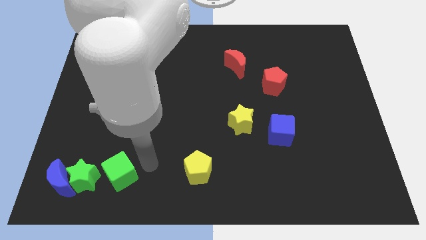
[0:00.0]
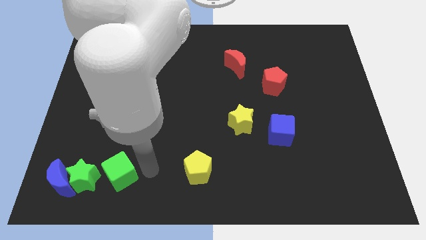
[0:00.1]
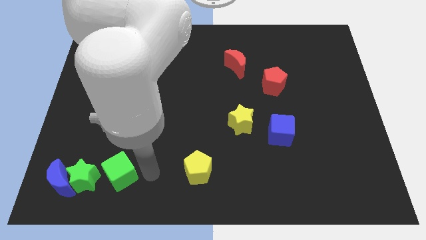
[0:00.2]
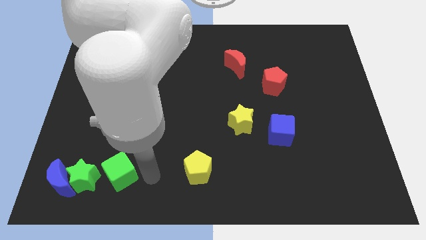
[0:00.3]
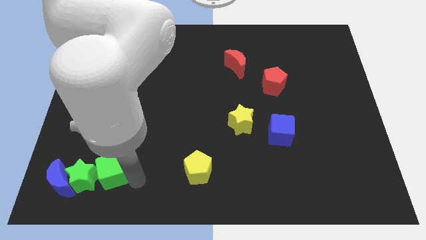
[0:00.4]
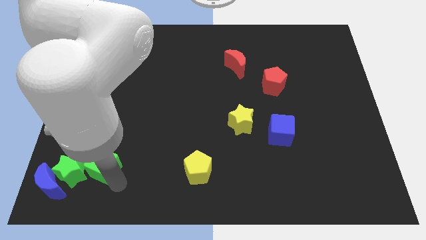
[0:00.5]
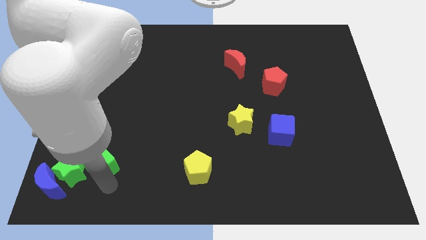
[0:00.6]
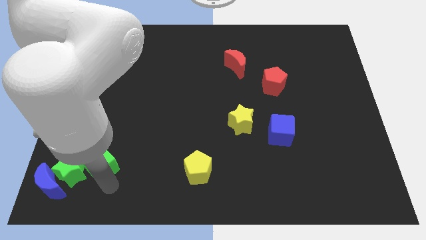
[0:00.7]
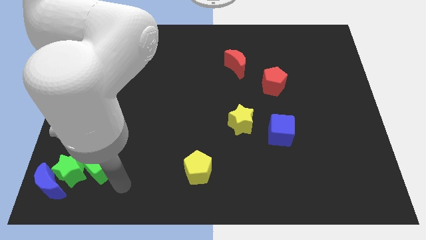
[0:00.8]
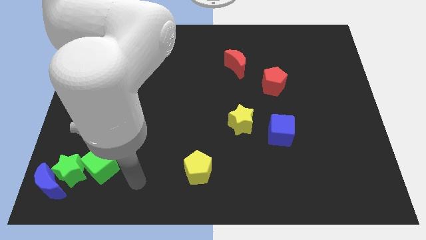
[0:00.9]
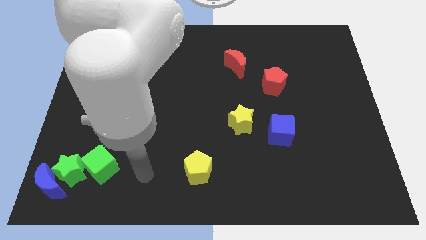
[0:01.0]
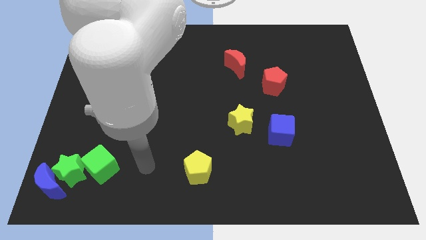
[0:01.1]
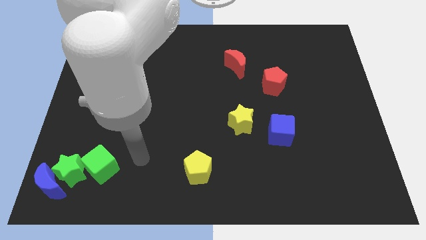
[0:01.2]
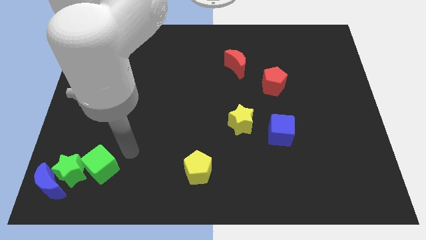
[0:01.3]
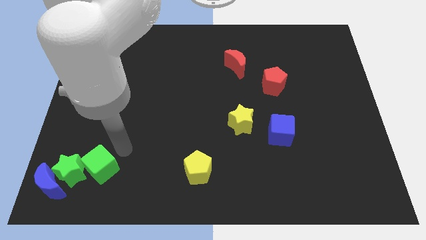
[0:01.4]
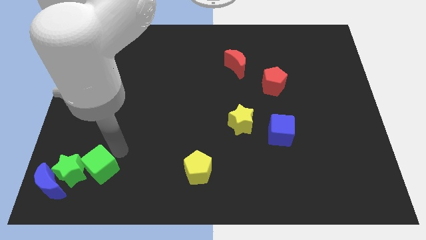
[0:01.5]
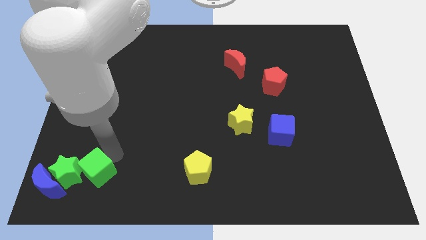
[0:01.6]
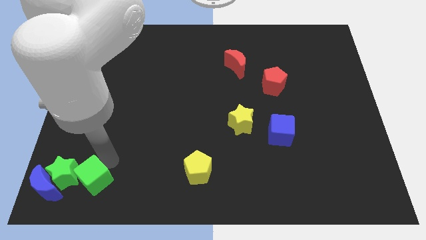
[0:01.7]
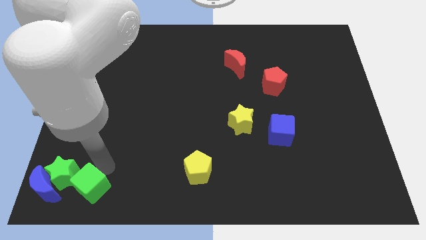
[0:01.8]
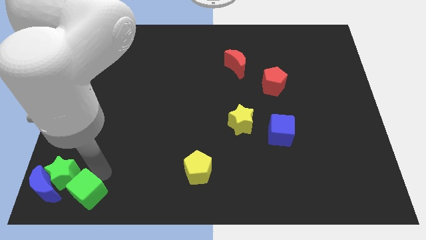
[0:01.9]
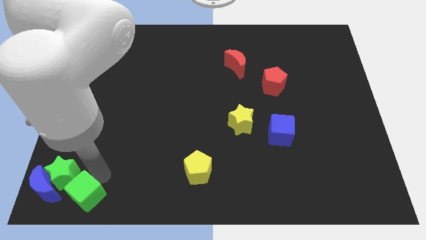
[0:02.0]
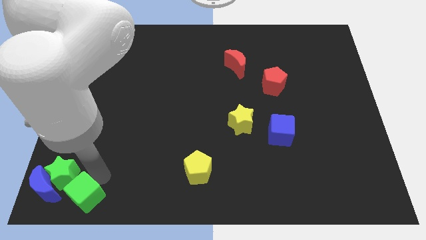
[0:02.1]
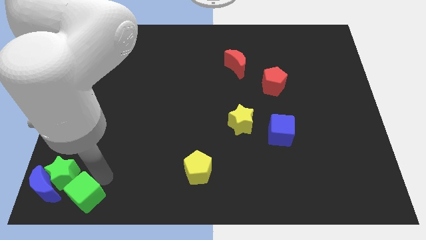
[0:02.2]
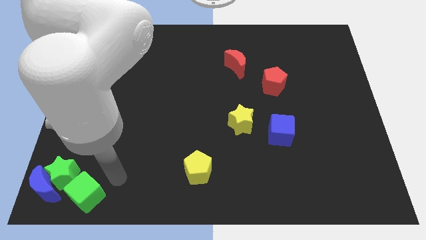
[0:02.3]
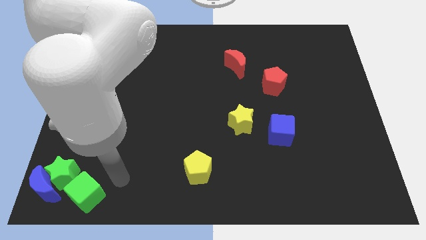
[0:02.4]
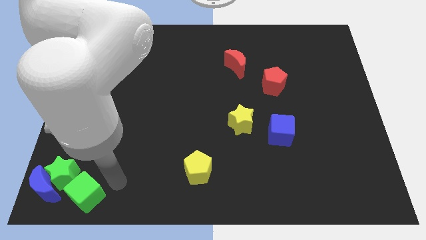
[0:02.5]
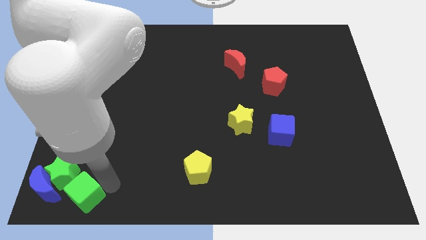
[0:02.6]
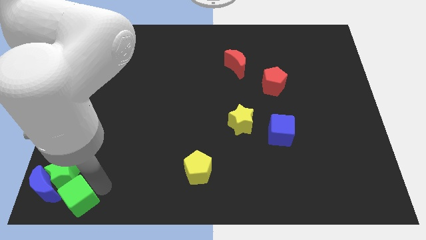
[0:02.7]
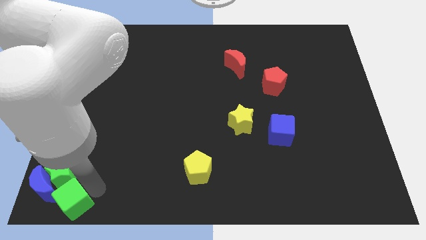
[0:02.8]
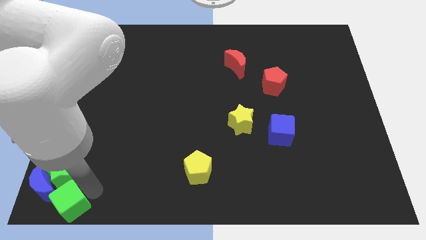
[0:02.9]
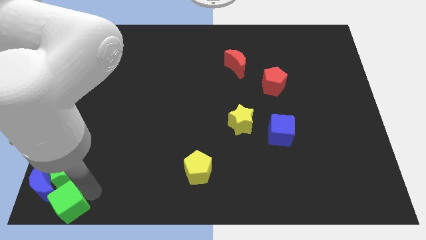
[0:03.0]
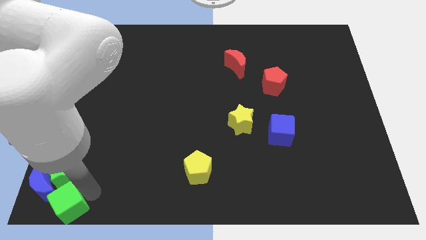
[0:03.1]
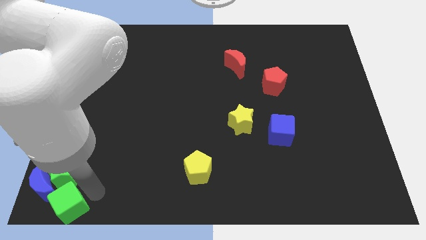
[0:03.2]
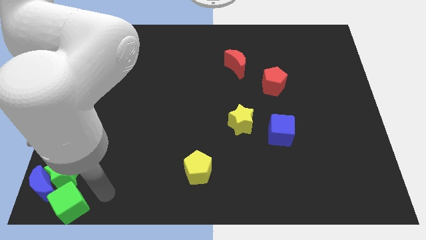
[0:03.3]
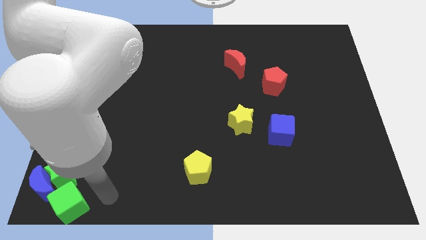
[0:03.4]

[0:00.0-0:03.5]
put the green cube at the bottom of the green star

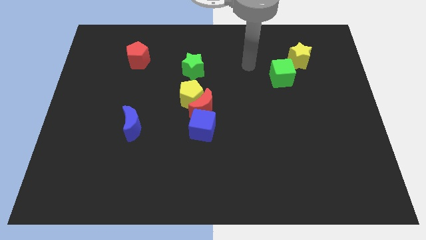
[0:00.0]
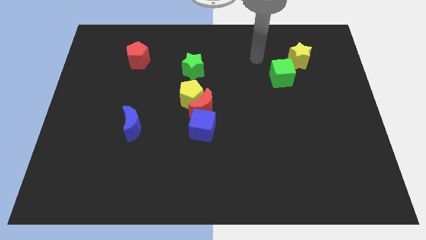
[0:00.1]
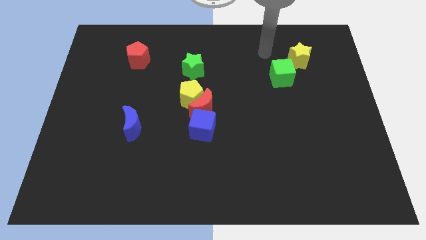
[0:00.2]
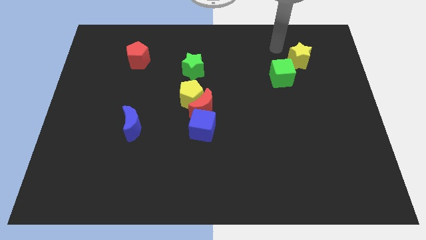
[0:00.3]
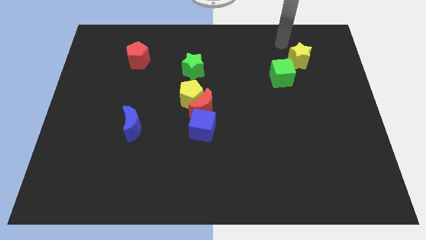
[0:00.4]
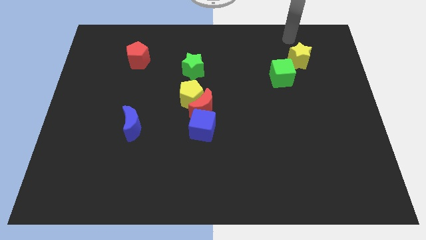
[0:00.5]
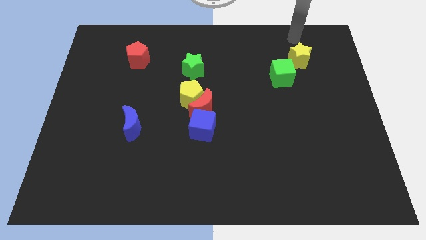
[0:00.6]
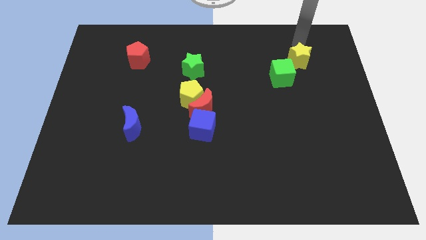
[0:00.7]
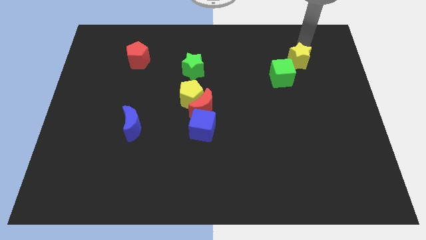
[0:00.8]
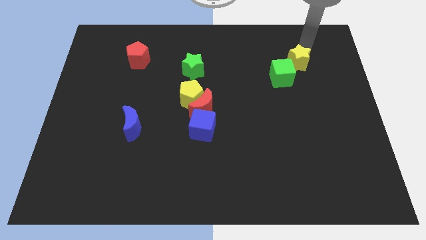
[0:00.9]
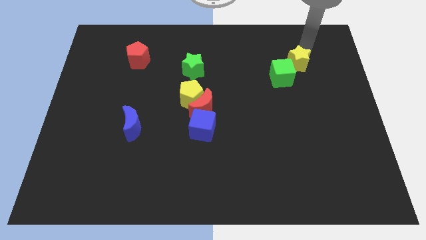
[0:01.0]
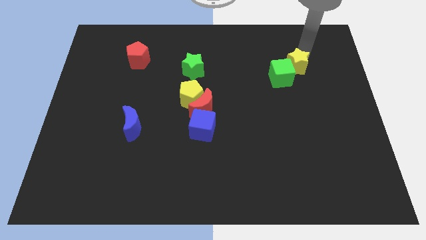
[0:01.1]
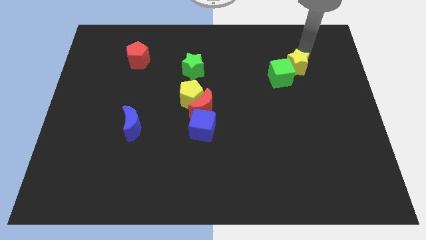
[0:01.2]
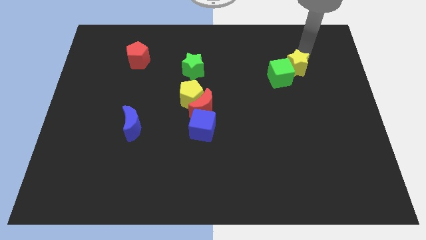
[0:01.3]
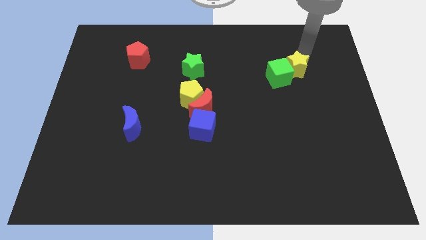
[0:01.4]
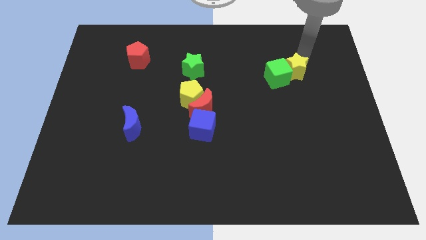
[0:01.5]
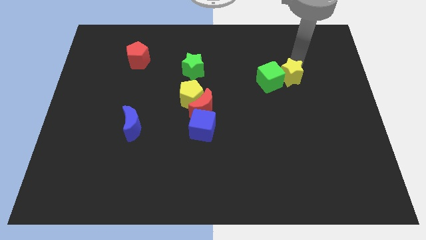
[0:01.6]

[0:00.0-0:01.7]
move the yellow star into teh right side of the green cube

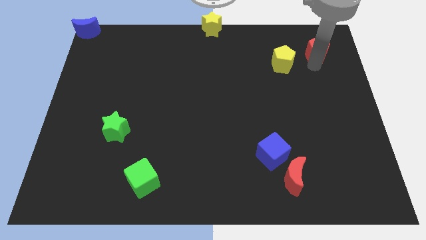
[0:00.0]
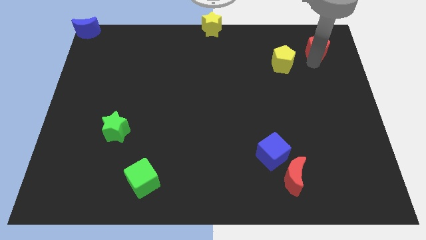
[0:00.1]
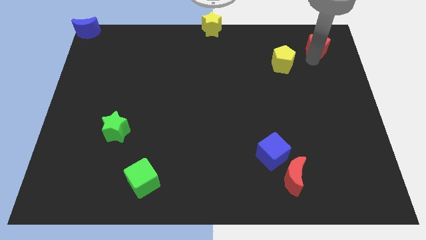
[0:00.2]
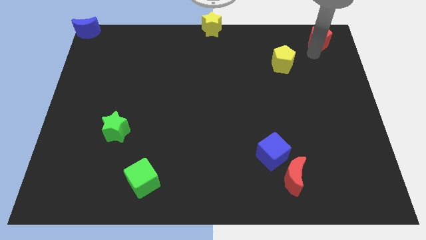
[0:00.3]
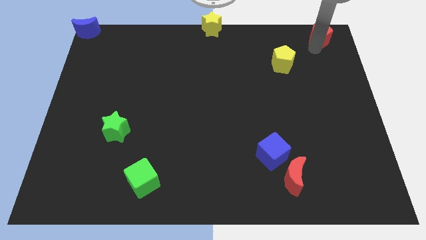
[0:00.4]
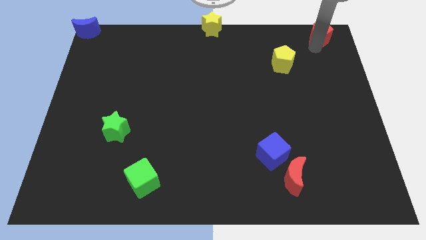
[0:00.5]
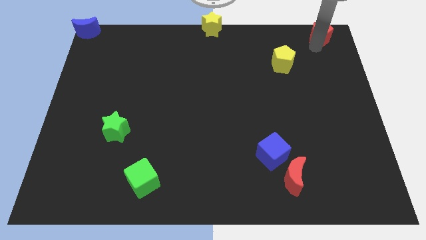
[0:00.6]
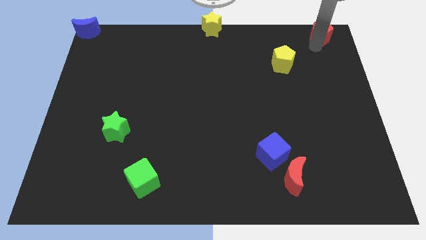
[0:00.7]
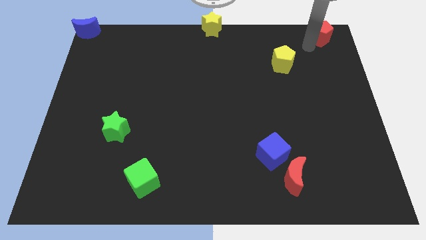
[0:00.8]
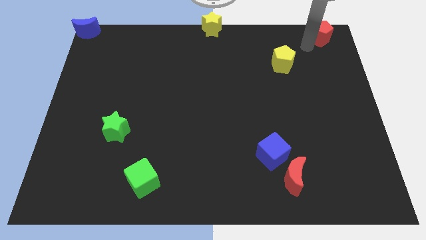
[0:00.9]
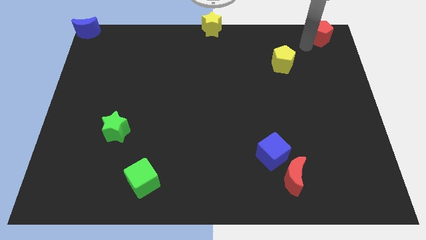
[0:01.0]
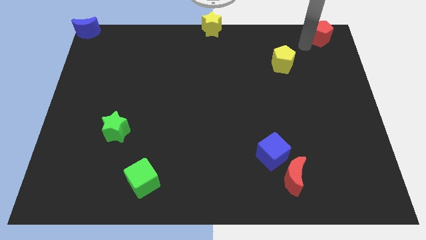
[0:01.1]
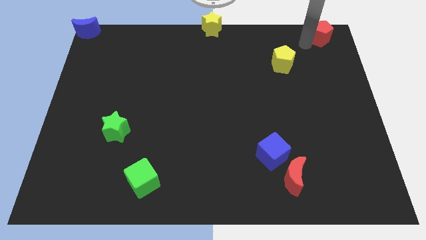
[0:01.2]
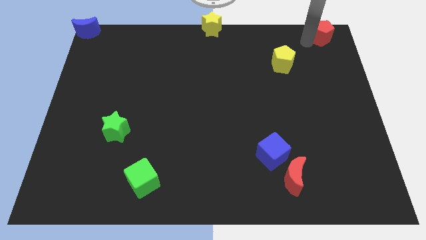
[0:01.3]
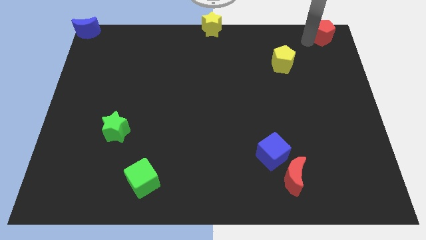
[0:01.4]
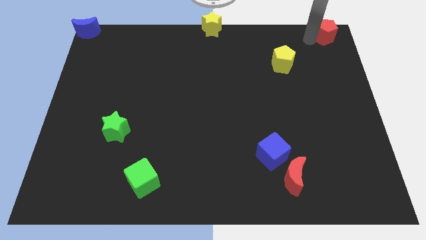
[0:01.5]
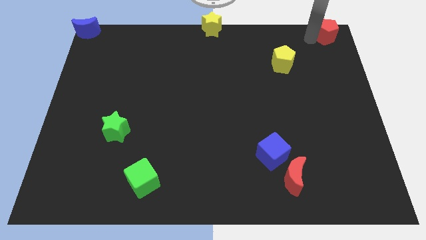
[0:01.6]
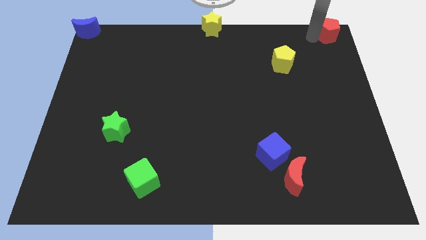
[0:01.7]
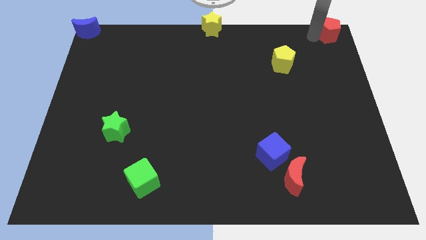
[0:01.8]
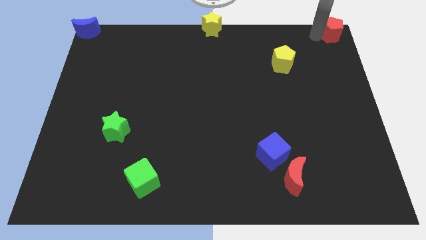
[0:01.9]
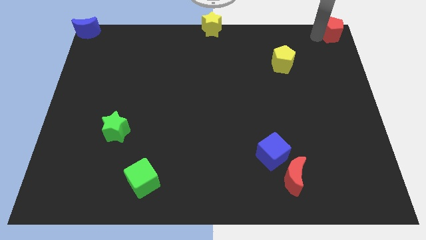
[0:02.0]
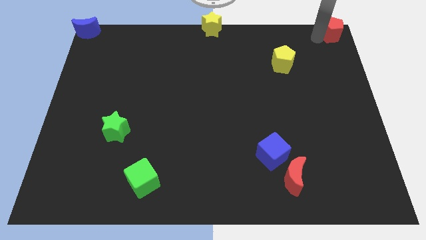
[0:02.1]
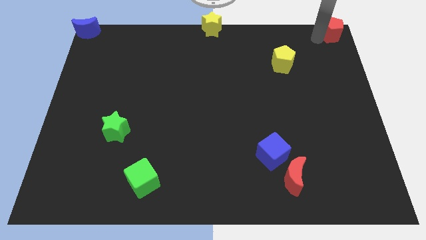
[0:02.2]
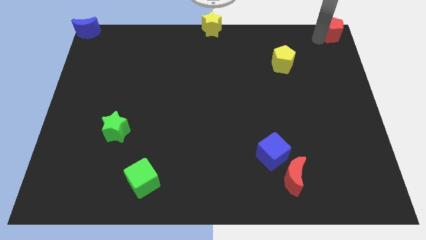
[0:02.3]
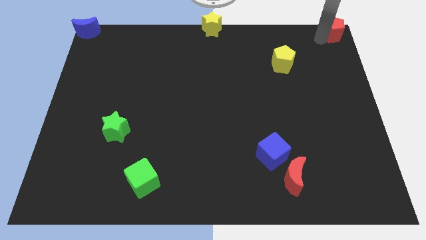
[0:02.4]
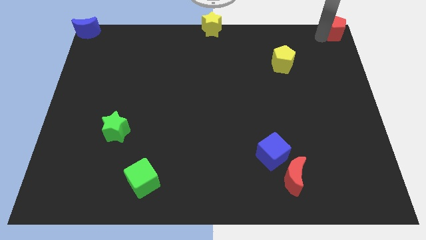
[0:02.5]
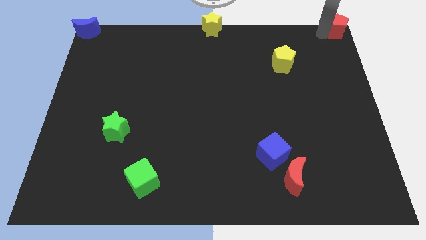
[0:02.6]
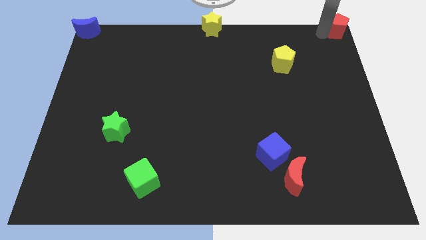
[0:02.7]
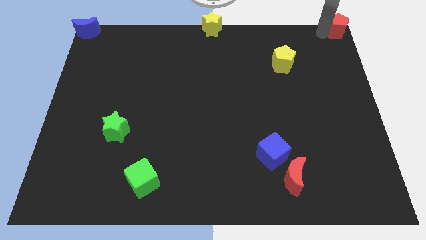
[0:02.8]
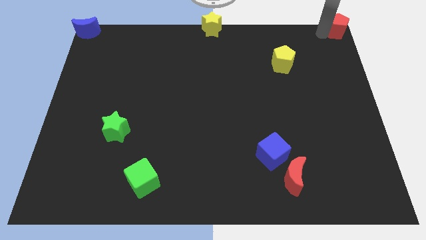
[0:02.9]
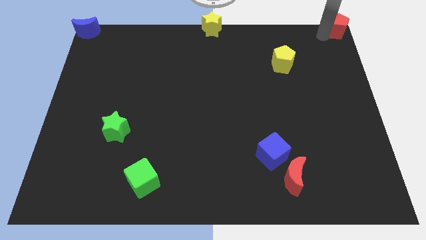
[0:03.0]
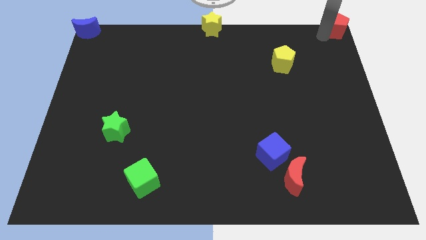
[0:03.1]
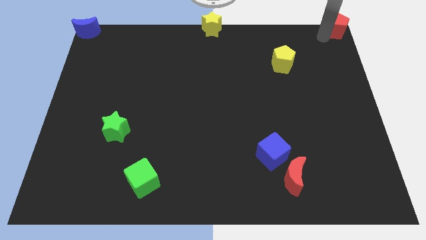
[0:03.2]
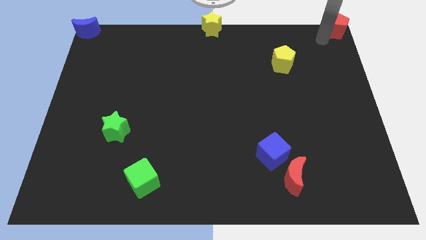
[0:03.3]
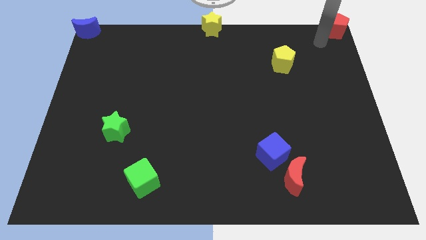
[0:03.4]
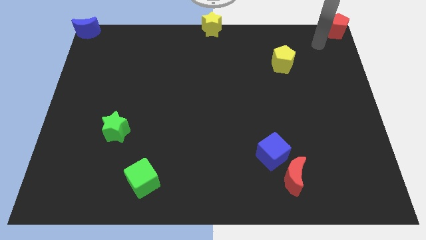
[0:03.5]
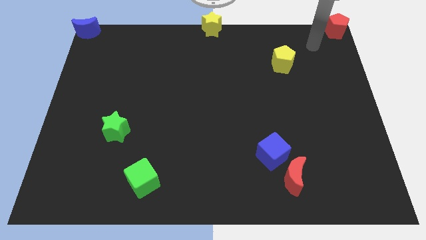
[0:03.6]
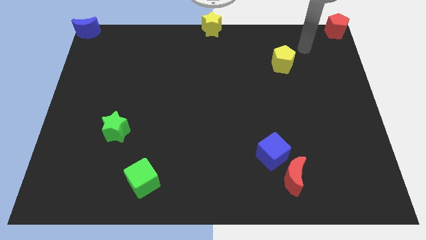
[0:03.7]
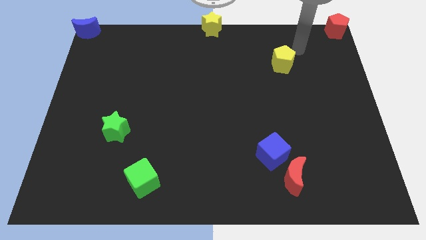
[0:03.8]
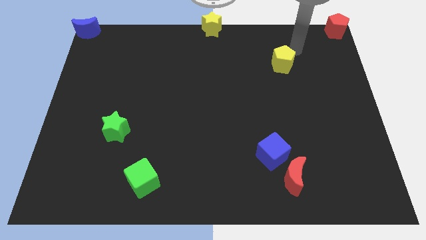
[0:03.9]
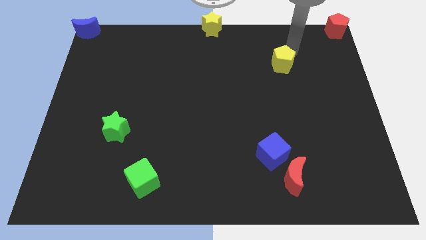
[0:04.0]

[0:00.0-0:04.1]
push red pentagon to the top right corner
